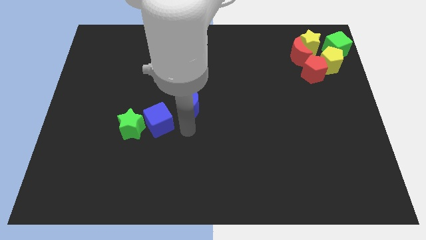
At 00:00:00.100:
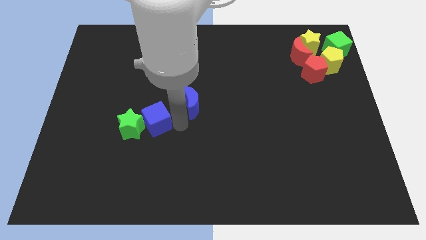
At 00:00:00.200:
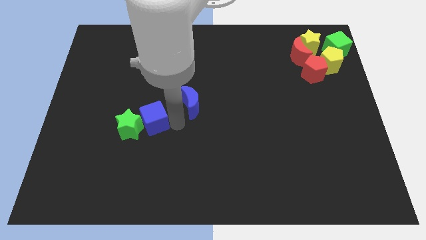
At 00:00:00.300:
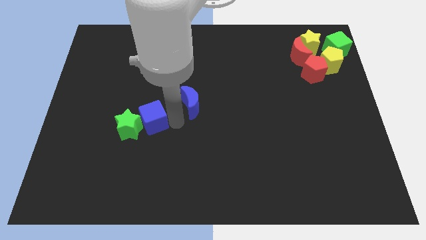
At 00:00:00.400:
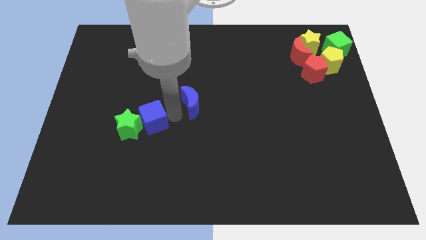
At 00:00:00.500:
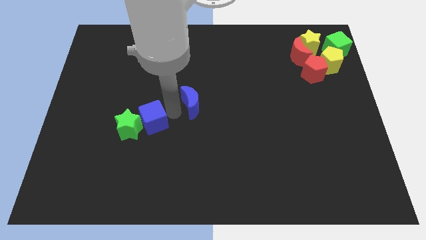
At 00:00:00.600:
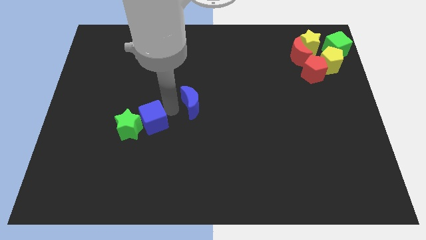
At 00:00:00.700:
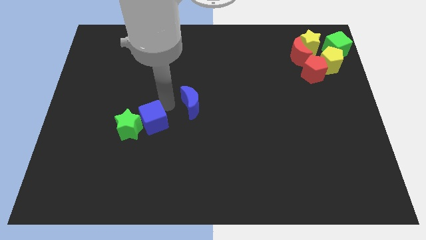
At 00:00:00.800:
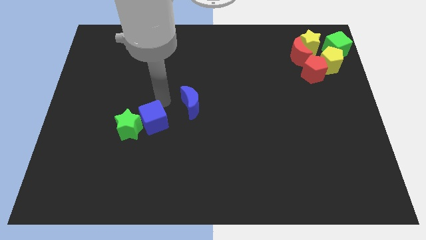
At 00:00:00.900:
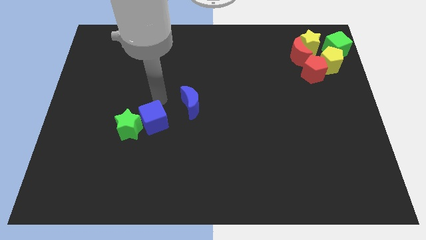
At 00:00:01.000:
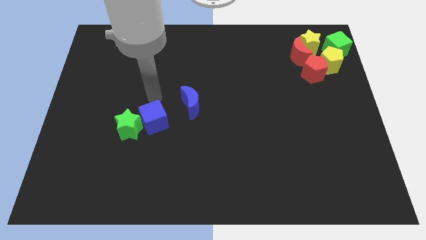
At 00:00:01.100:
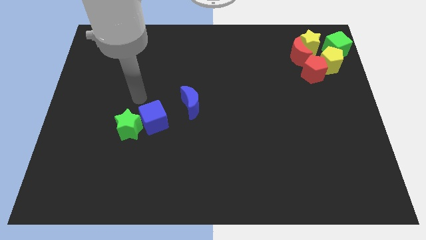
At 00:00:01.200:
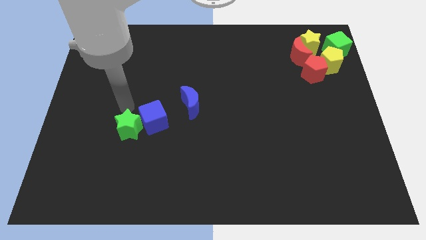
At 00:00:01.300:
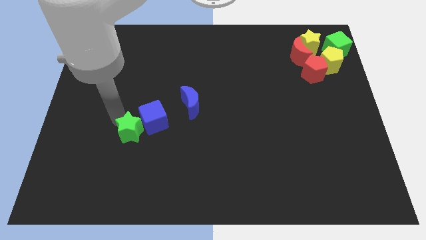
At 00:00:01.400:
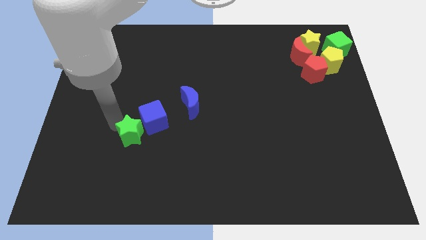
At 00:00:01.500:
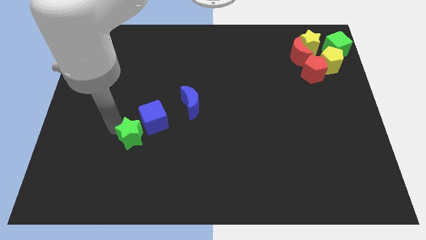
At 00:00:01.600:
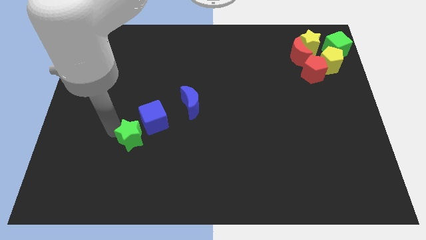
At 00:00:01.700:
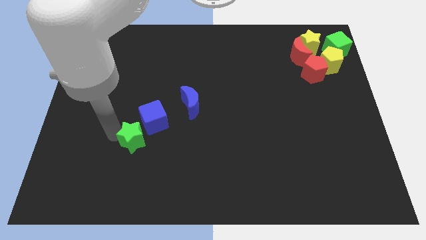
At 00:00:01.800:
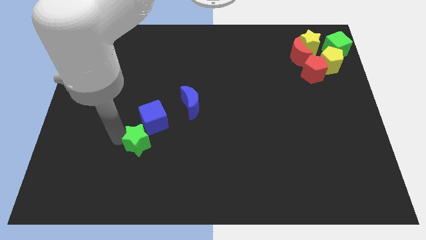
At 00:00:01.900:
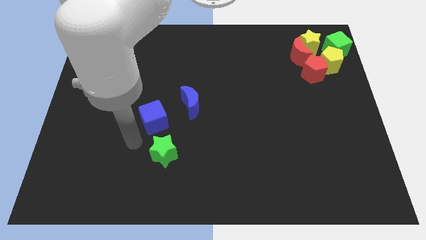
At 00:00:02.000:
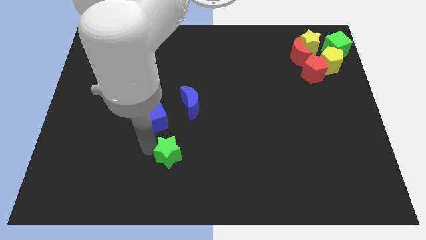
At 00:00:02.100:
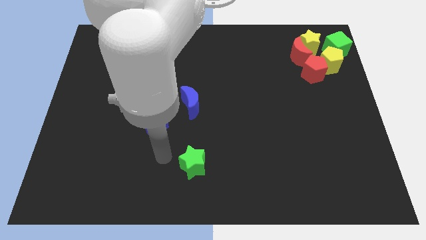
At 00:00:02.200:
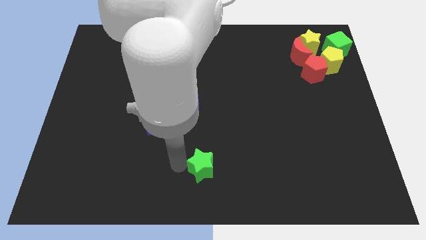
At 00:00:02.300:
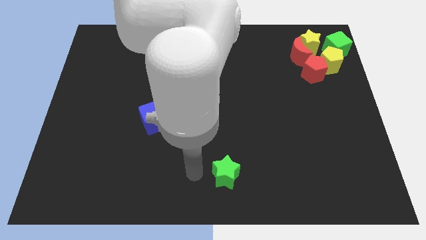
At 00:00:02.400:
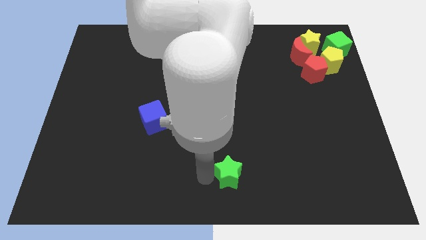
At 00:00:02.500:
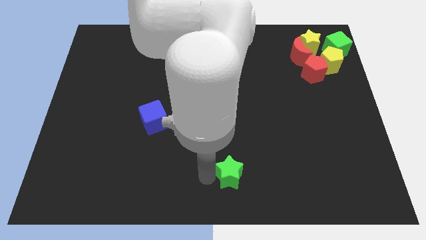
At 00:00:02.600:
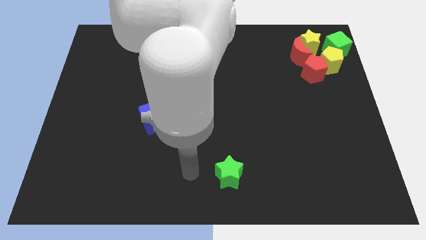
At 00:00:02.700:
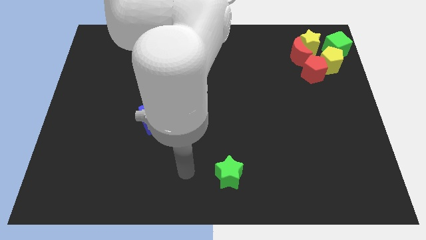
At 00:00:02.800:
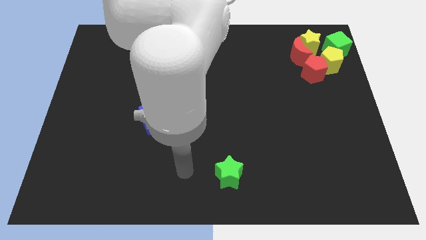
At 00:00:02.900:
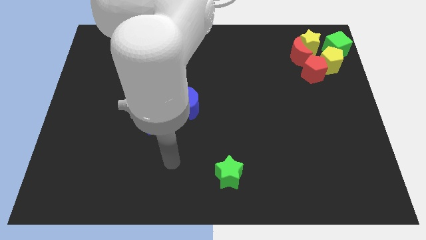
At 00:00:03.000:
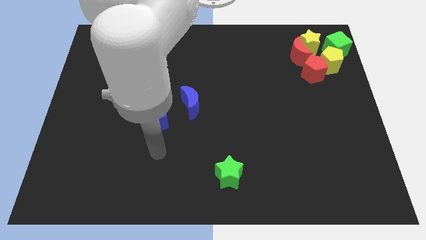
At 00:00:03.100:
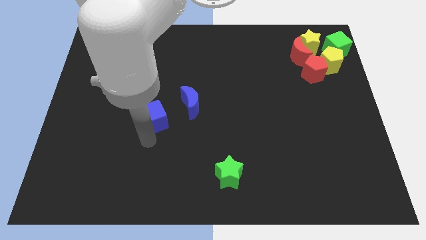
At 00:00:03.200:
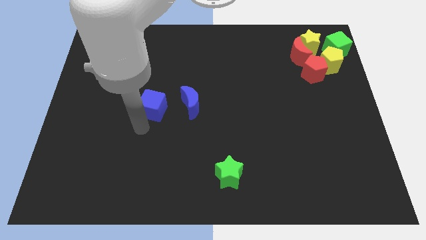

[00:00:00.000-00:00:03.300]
slide the green cube diagonally bottom right to the blue moon

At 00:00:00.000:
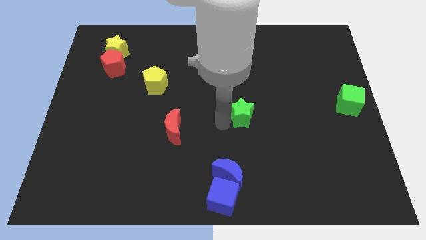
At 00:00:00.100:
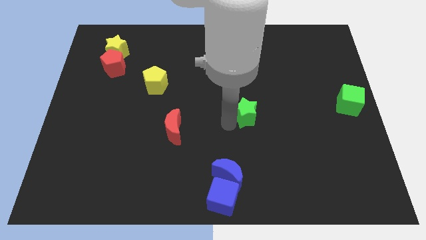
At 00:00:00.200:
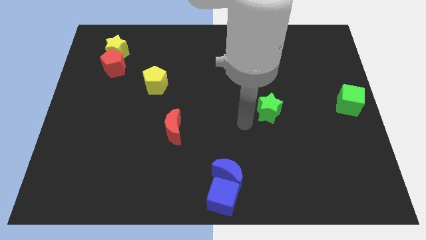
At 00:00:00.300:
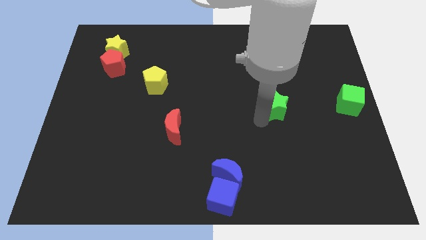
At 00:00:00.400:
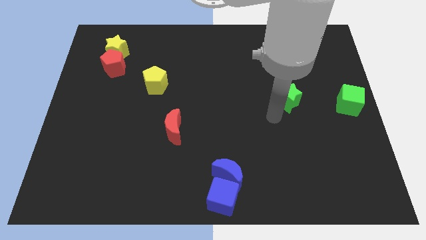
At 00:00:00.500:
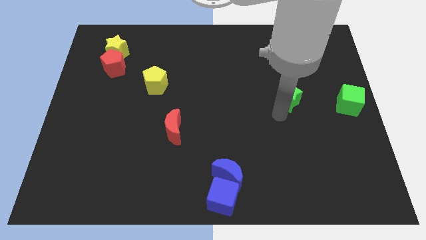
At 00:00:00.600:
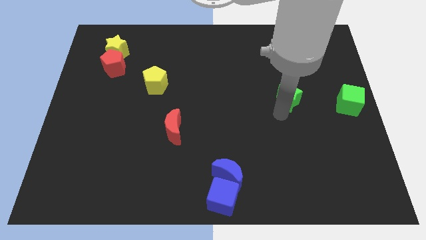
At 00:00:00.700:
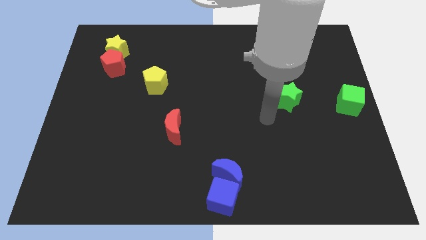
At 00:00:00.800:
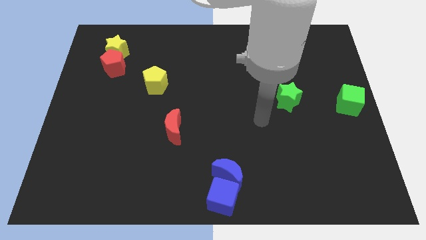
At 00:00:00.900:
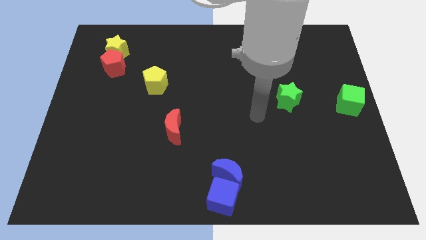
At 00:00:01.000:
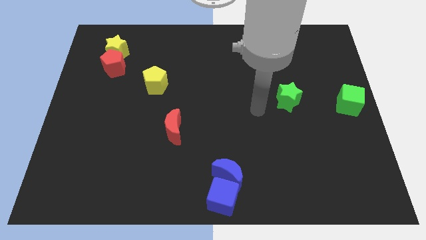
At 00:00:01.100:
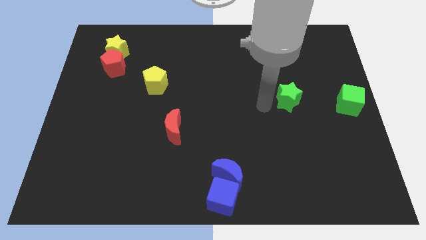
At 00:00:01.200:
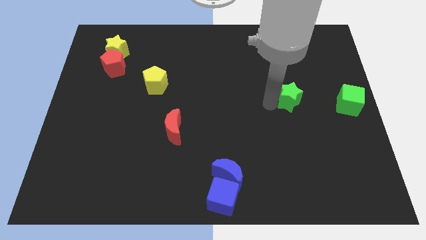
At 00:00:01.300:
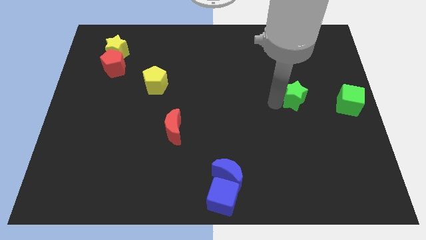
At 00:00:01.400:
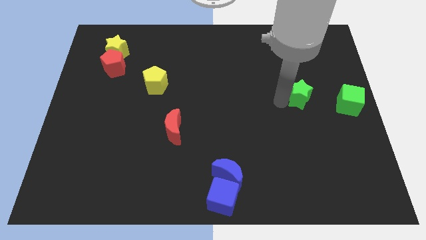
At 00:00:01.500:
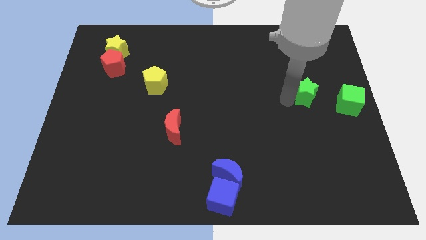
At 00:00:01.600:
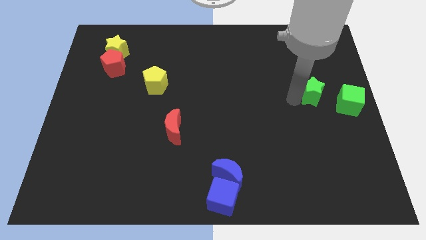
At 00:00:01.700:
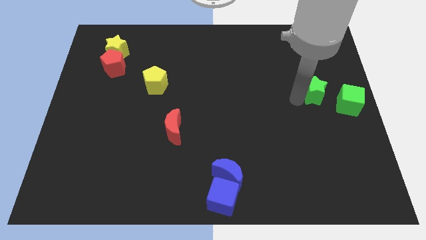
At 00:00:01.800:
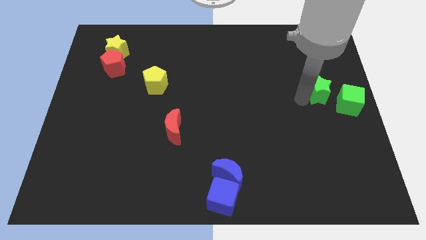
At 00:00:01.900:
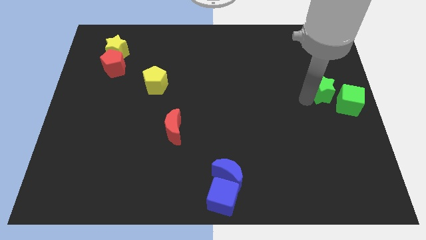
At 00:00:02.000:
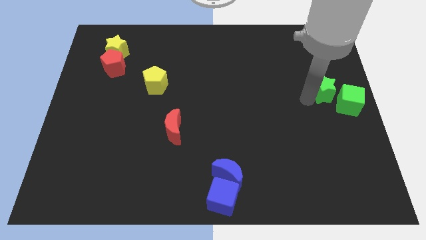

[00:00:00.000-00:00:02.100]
push the green star close to the green cube

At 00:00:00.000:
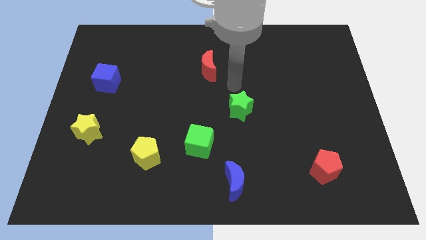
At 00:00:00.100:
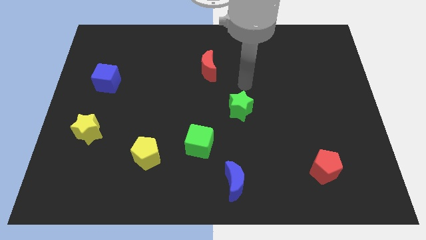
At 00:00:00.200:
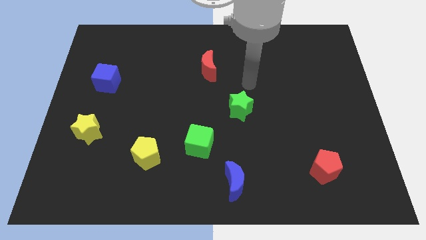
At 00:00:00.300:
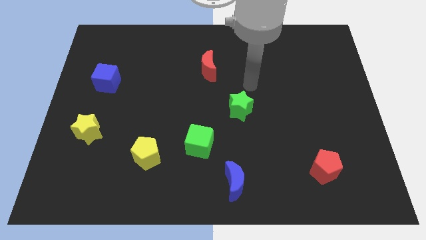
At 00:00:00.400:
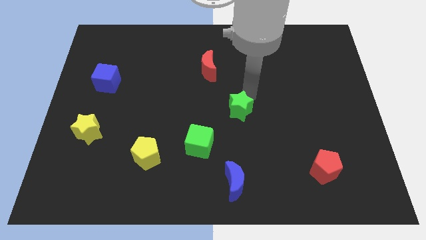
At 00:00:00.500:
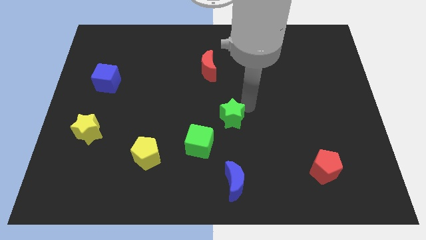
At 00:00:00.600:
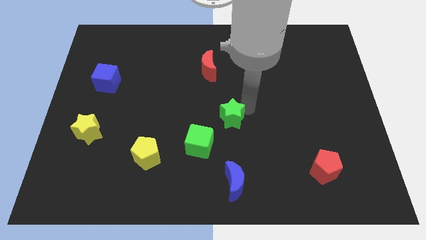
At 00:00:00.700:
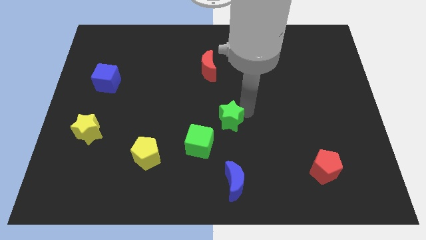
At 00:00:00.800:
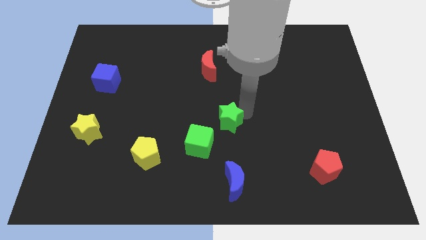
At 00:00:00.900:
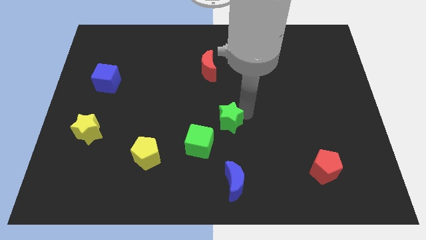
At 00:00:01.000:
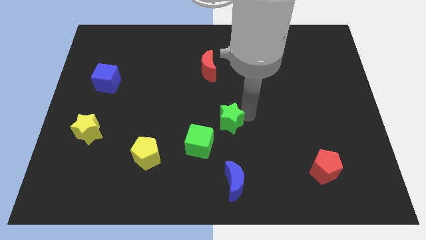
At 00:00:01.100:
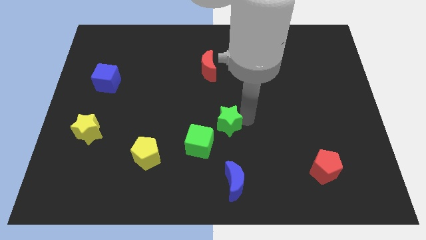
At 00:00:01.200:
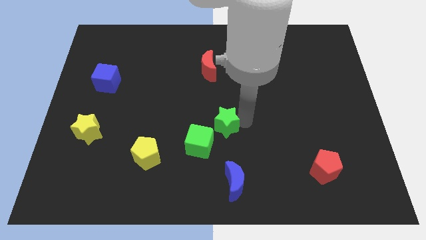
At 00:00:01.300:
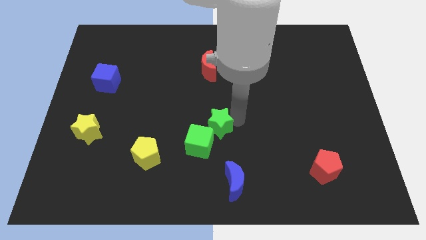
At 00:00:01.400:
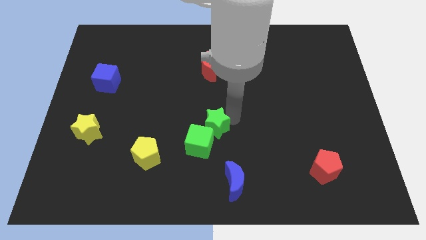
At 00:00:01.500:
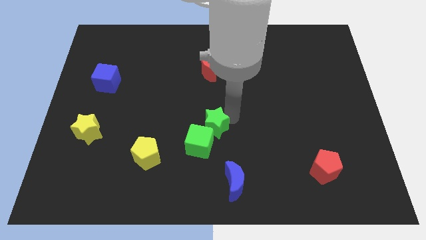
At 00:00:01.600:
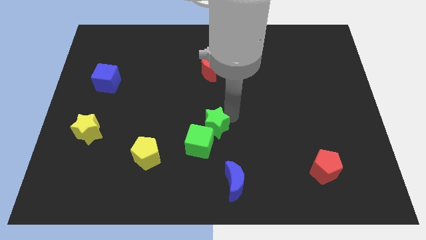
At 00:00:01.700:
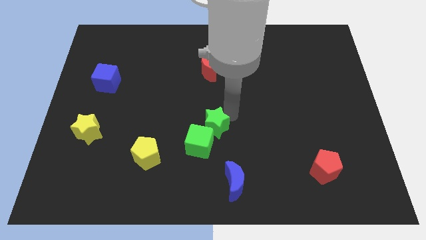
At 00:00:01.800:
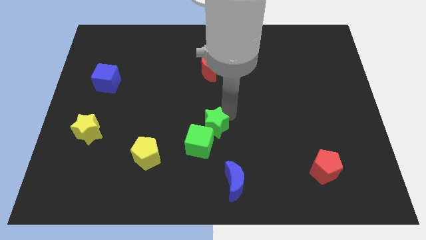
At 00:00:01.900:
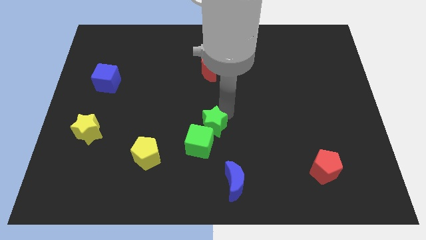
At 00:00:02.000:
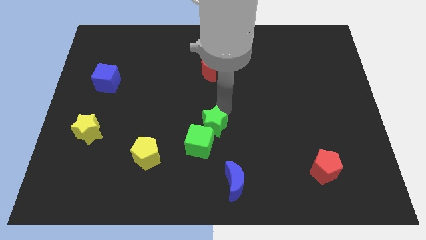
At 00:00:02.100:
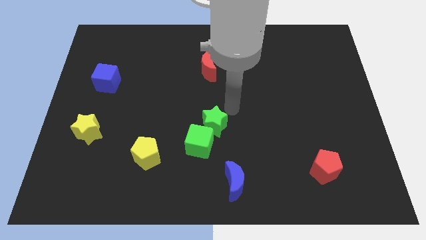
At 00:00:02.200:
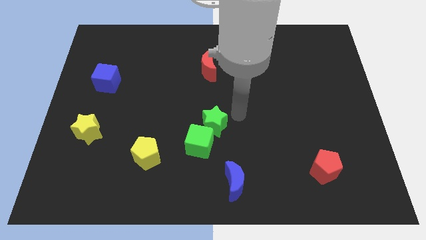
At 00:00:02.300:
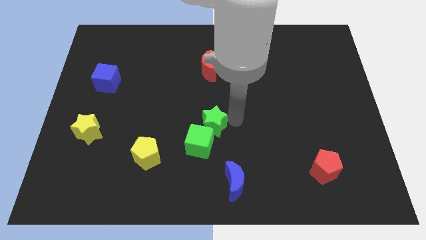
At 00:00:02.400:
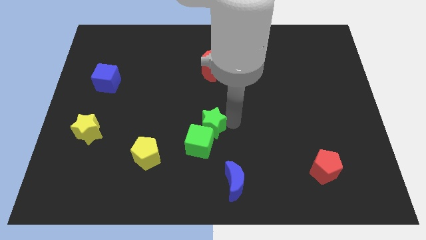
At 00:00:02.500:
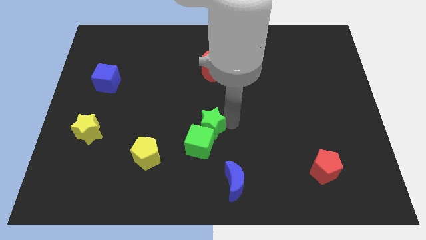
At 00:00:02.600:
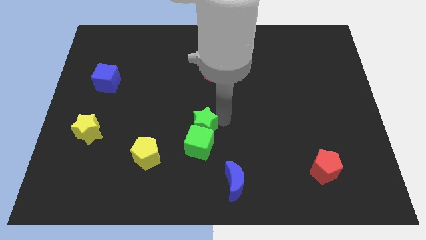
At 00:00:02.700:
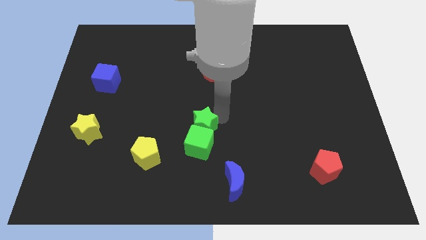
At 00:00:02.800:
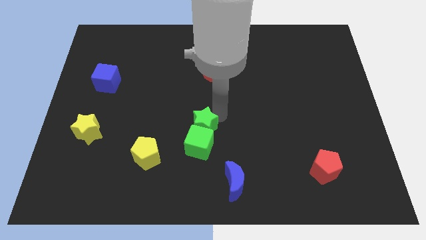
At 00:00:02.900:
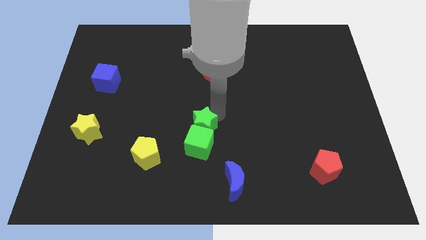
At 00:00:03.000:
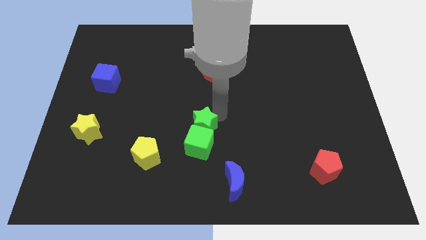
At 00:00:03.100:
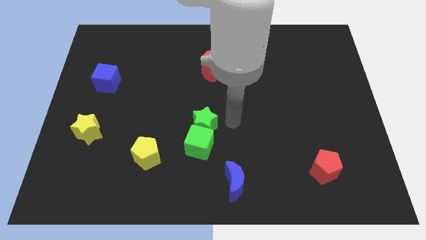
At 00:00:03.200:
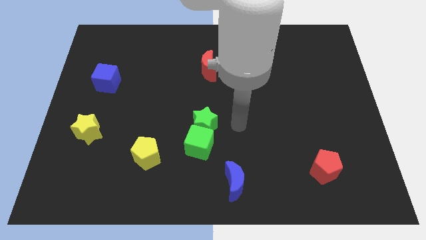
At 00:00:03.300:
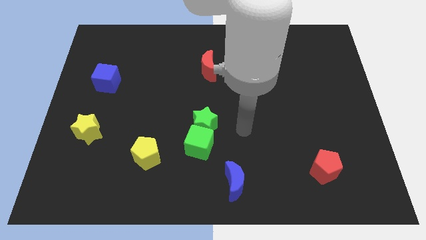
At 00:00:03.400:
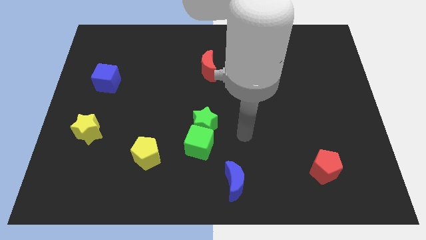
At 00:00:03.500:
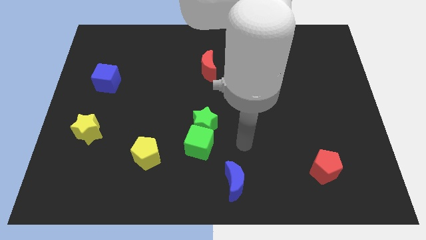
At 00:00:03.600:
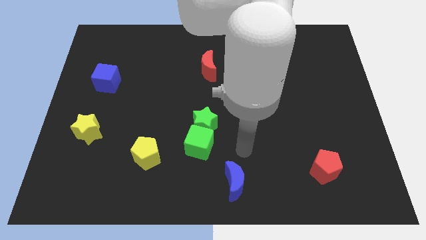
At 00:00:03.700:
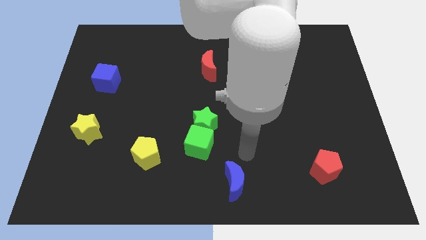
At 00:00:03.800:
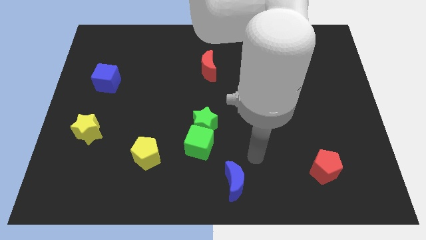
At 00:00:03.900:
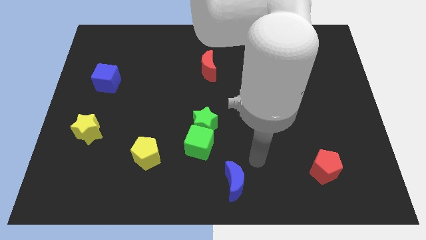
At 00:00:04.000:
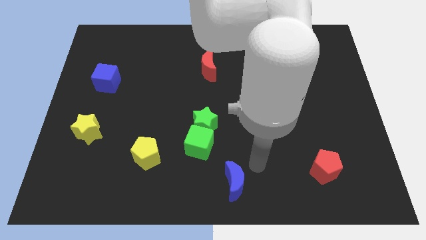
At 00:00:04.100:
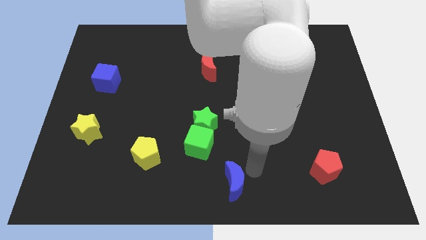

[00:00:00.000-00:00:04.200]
place the green star above the green cube
